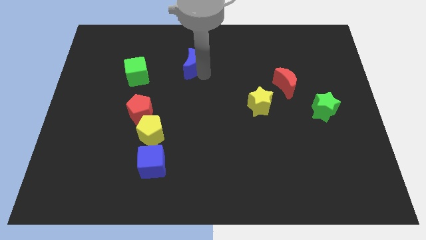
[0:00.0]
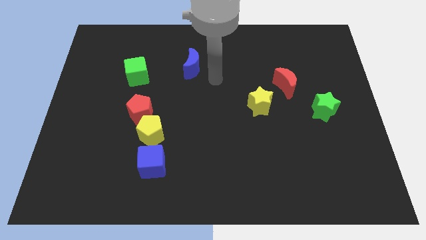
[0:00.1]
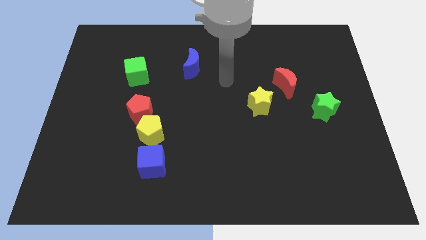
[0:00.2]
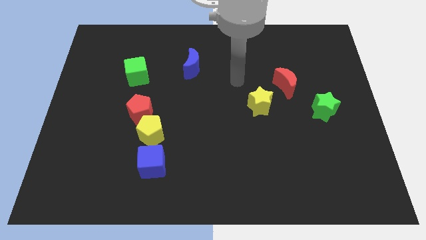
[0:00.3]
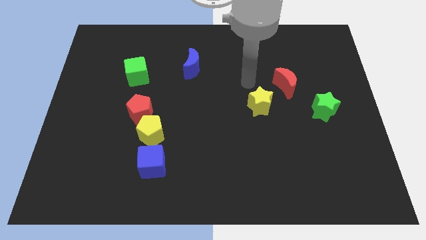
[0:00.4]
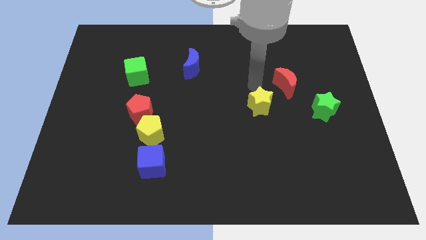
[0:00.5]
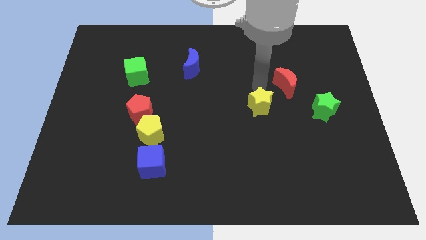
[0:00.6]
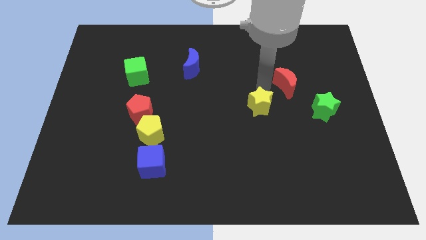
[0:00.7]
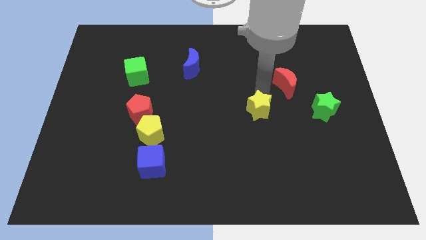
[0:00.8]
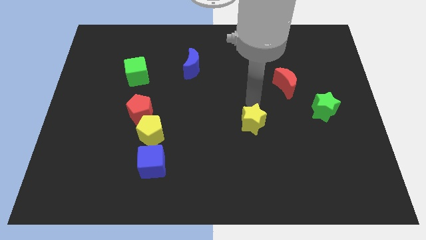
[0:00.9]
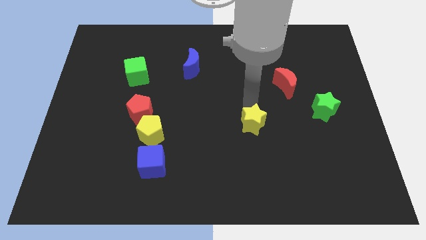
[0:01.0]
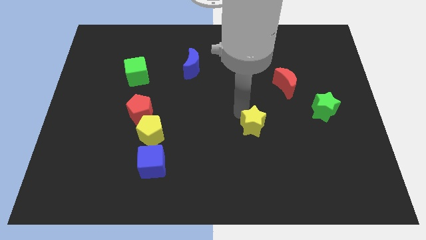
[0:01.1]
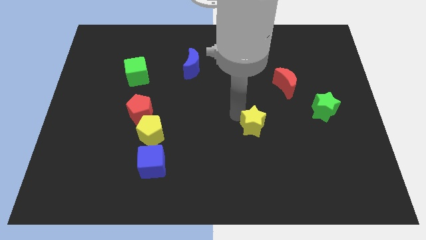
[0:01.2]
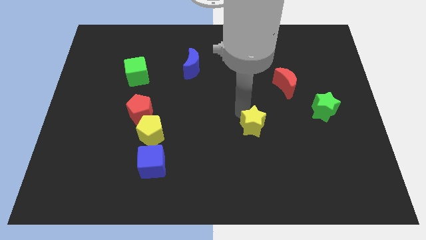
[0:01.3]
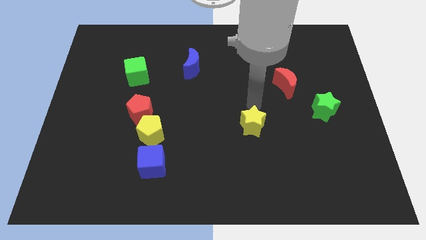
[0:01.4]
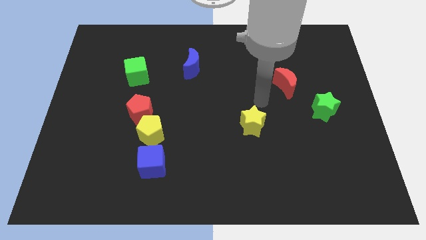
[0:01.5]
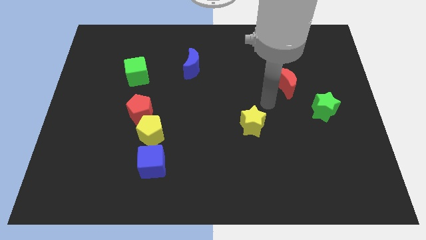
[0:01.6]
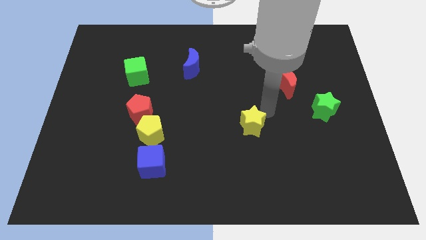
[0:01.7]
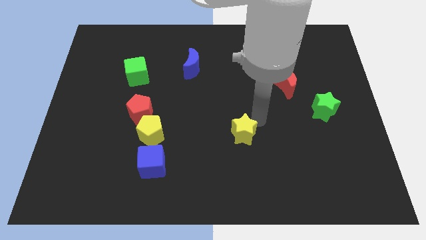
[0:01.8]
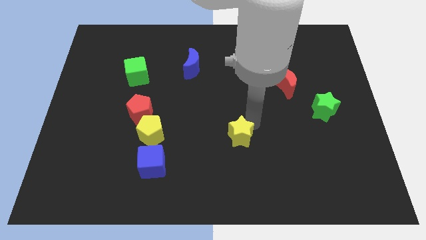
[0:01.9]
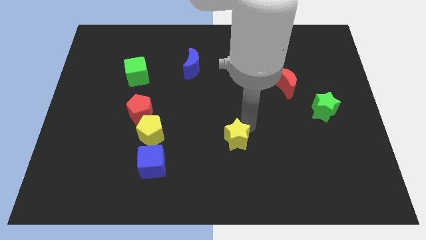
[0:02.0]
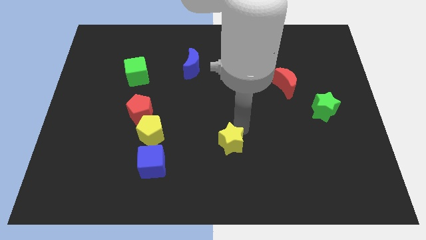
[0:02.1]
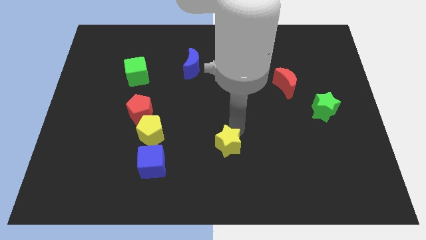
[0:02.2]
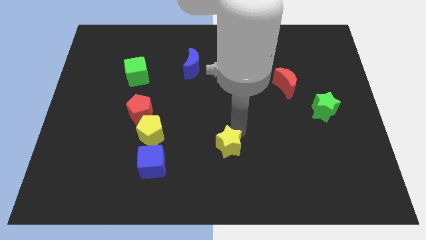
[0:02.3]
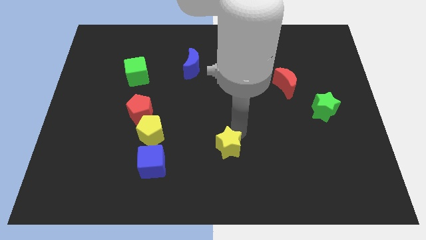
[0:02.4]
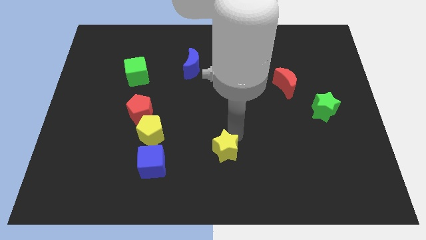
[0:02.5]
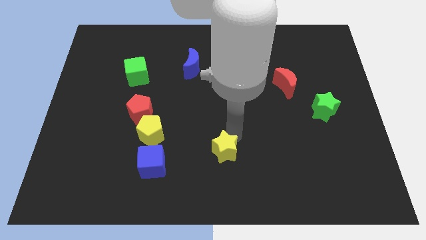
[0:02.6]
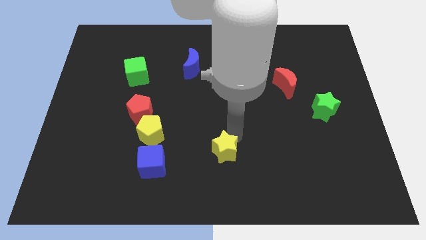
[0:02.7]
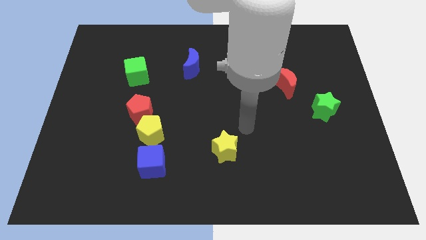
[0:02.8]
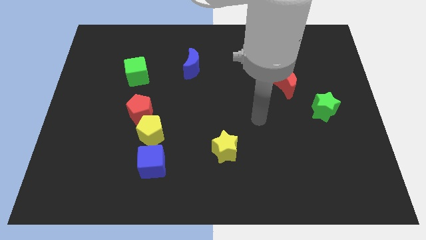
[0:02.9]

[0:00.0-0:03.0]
move the yellow star to the bottom right of the yellow pentagon

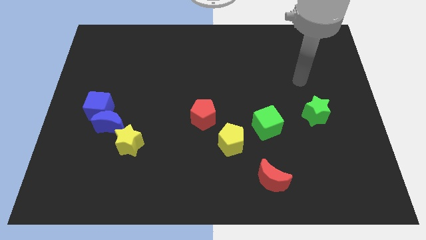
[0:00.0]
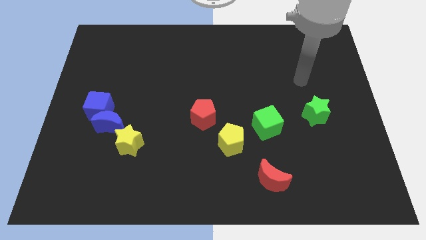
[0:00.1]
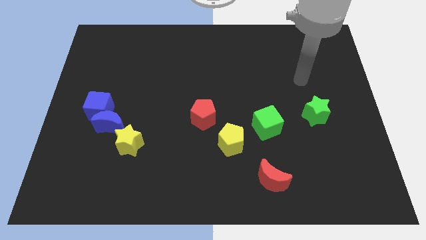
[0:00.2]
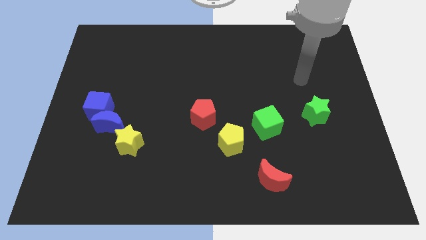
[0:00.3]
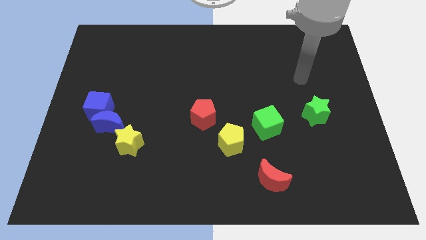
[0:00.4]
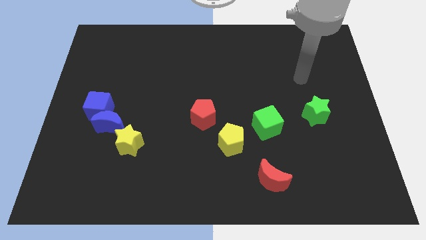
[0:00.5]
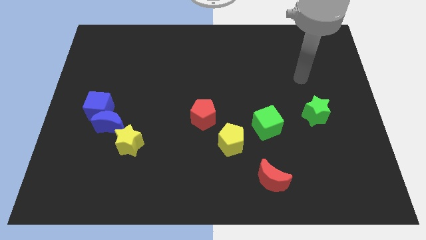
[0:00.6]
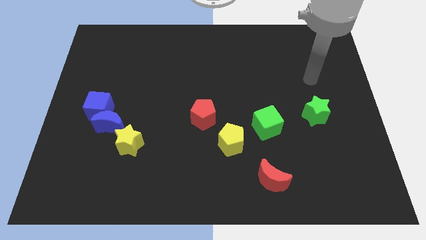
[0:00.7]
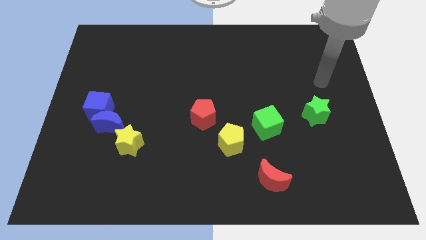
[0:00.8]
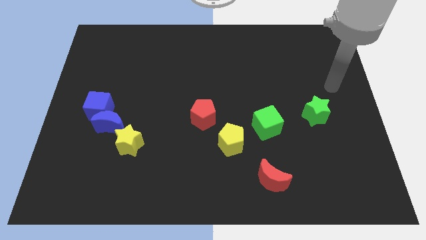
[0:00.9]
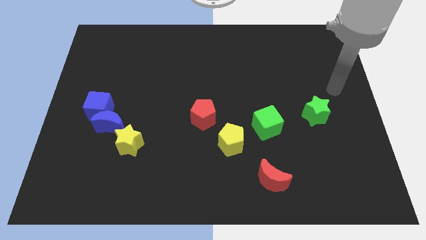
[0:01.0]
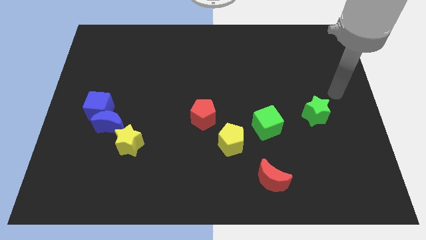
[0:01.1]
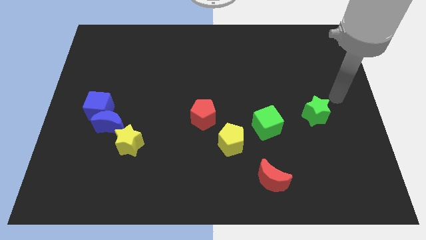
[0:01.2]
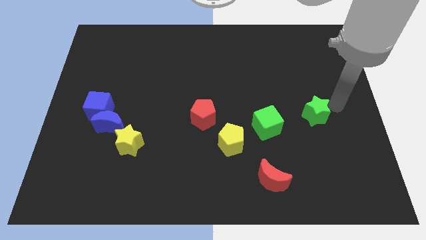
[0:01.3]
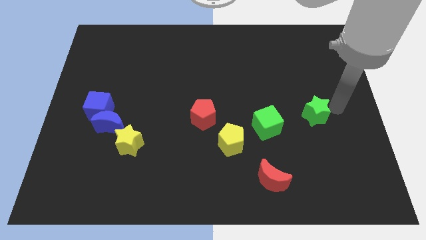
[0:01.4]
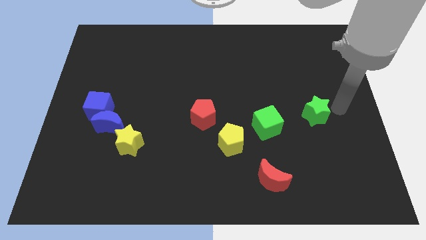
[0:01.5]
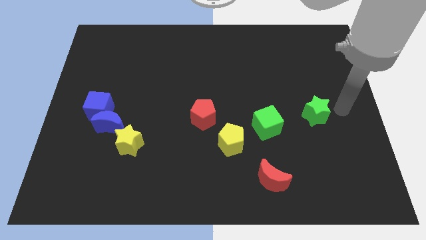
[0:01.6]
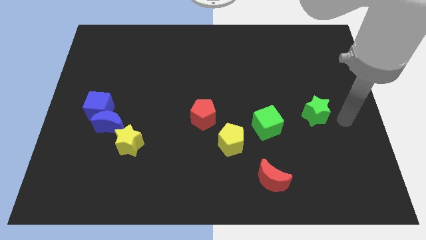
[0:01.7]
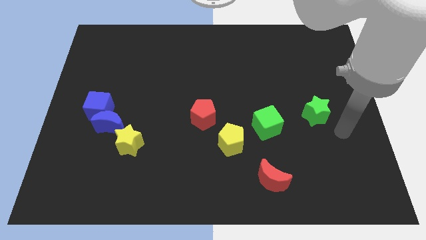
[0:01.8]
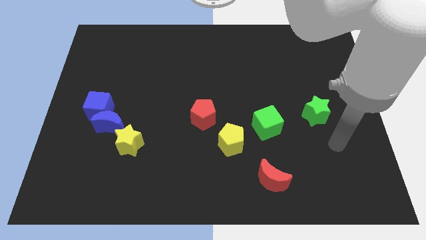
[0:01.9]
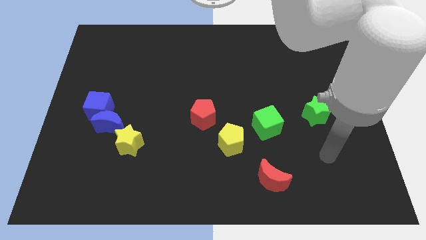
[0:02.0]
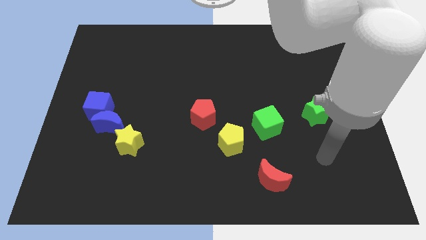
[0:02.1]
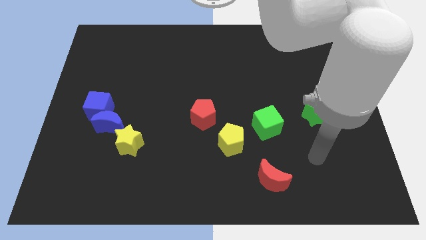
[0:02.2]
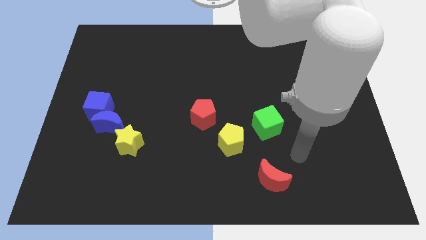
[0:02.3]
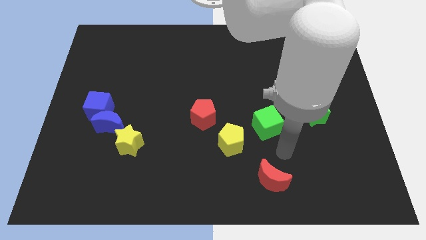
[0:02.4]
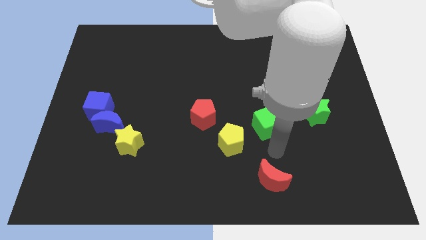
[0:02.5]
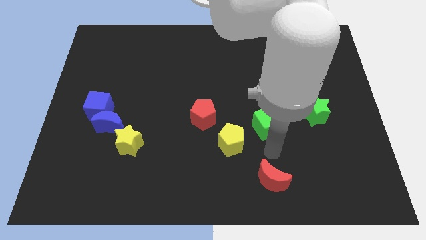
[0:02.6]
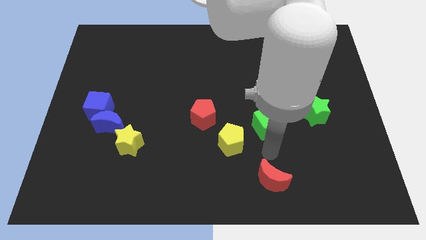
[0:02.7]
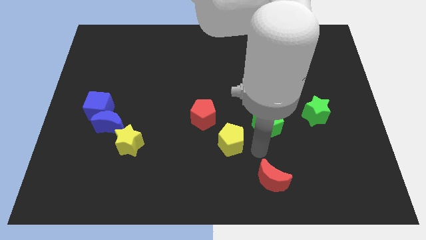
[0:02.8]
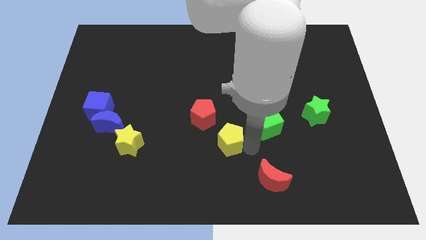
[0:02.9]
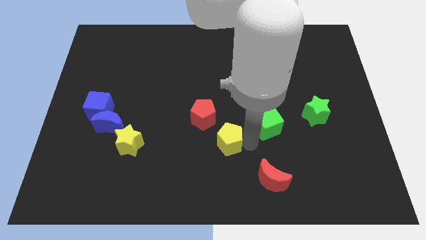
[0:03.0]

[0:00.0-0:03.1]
touch the right side of the yellow pentagon

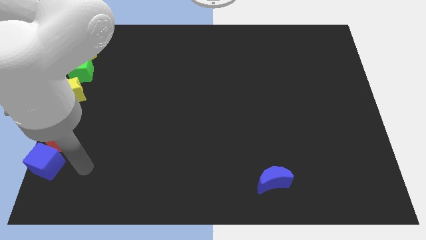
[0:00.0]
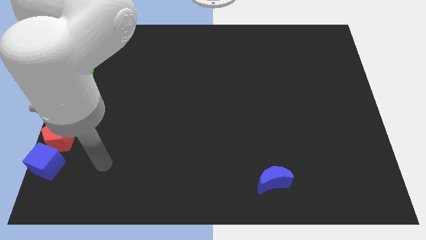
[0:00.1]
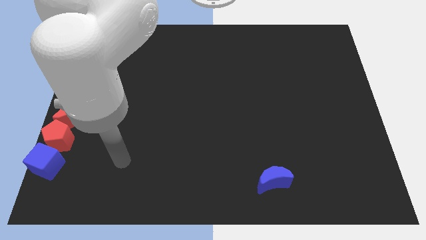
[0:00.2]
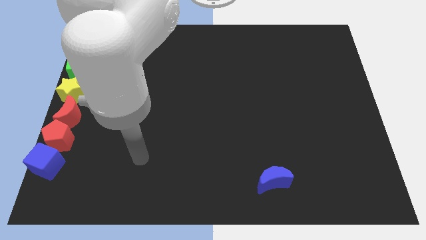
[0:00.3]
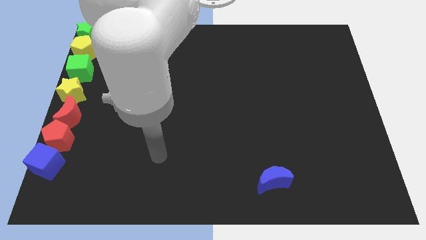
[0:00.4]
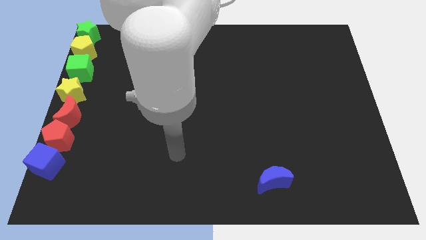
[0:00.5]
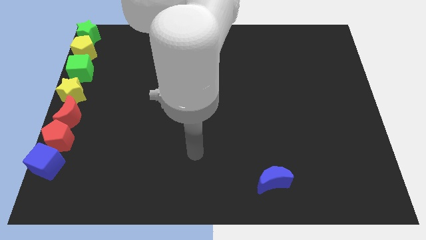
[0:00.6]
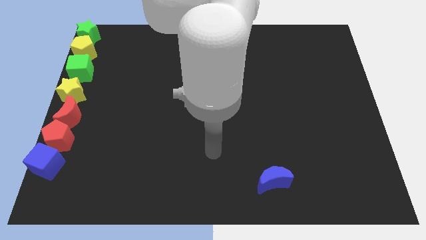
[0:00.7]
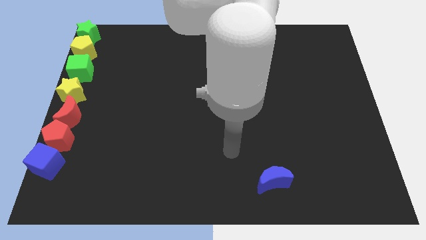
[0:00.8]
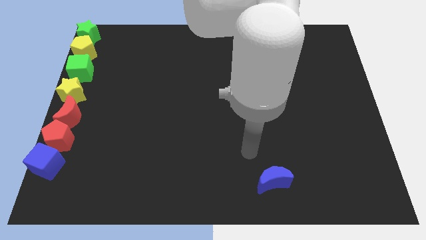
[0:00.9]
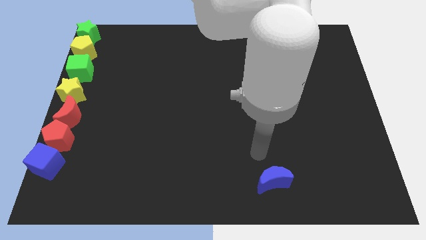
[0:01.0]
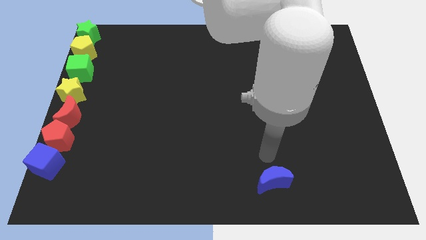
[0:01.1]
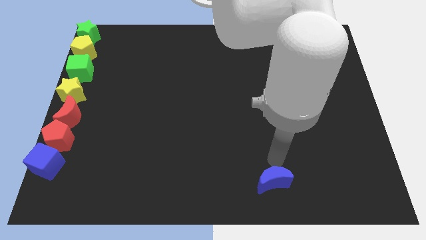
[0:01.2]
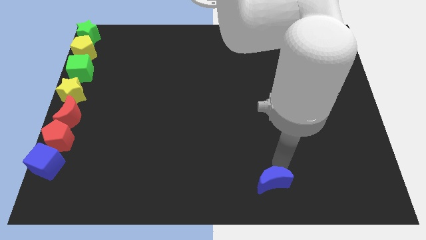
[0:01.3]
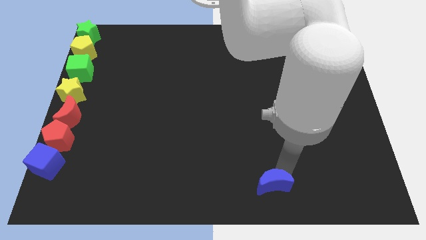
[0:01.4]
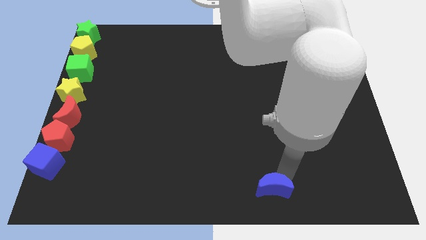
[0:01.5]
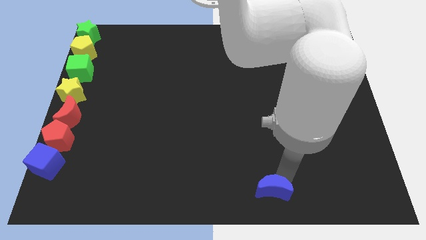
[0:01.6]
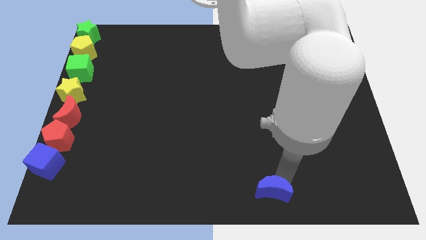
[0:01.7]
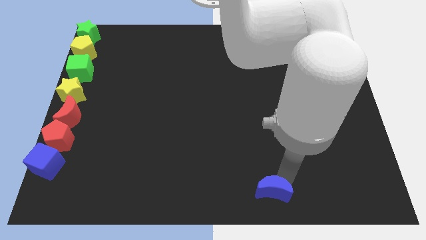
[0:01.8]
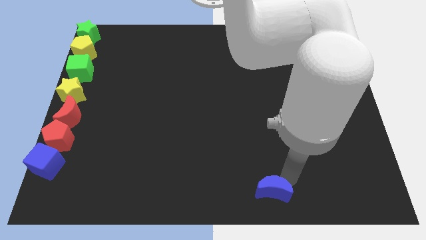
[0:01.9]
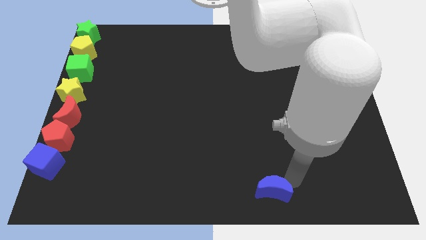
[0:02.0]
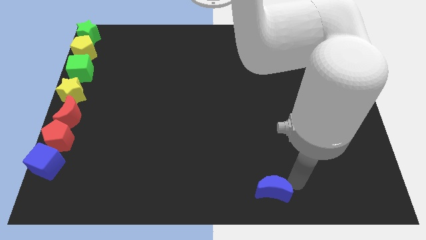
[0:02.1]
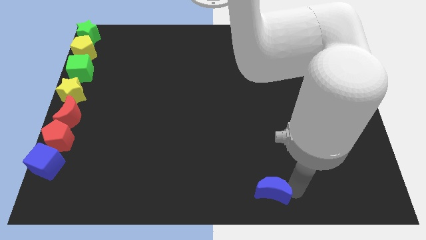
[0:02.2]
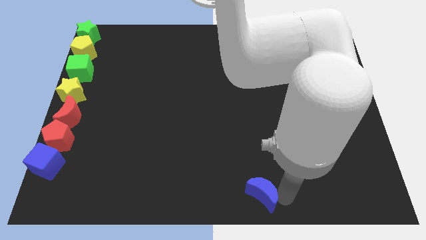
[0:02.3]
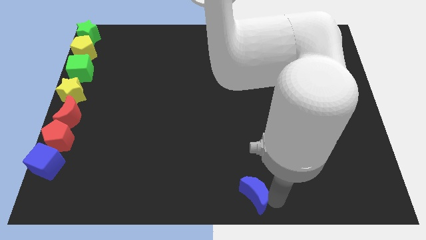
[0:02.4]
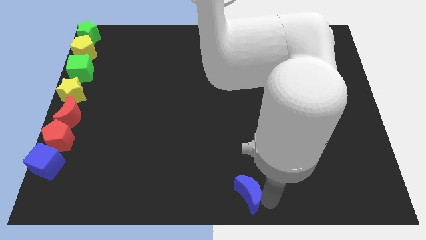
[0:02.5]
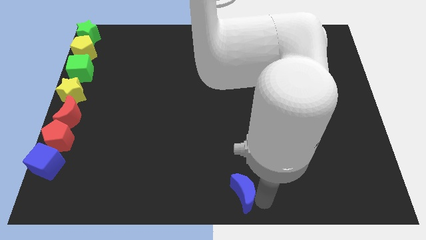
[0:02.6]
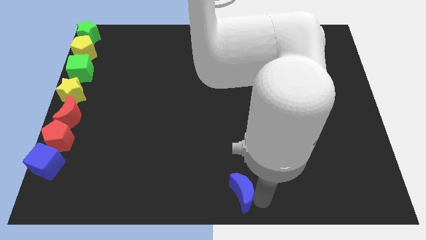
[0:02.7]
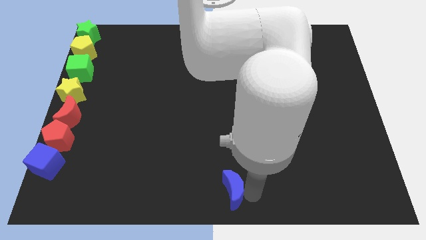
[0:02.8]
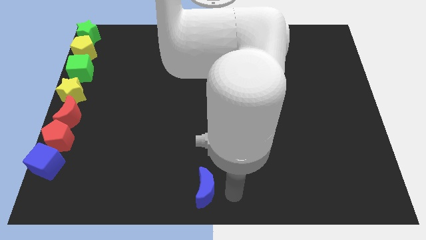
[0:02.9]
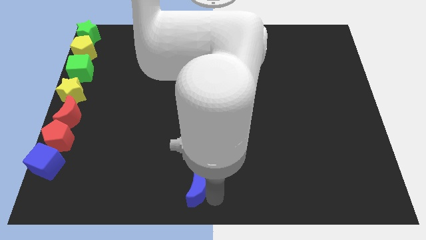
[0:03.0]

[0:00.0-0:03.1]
place blue crescent towards bottom of the center
